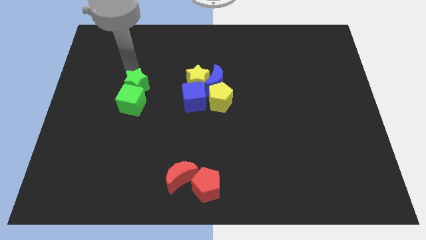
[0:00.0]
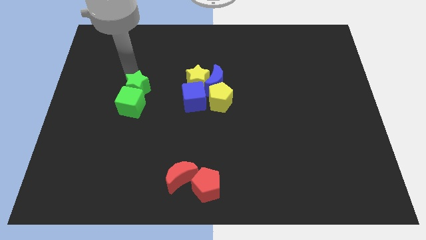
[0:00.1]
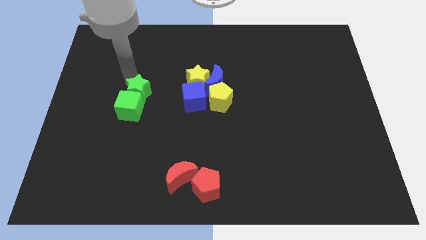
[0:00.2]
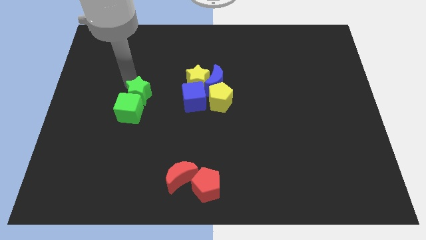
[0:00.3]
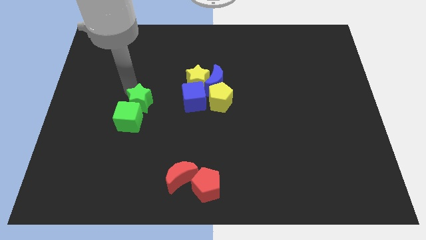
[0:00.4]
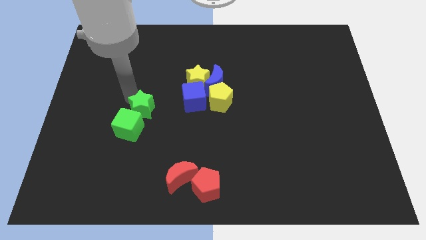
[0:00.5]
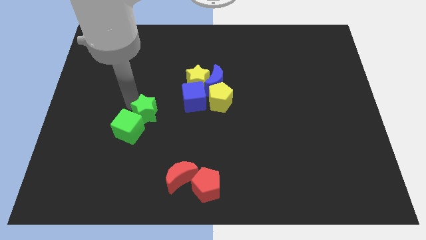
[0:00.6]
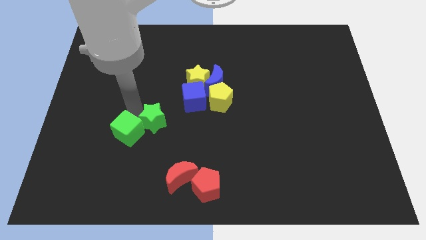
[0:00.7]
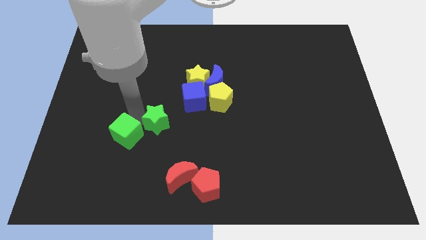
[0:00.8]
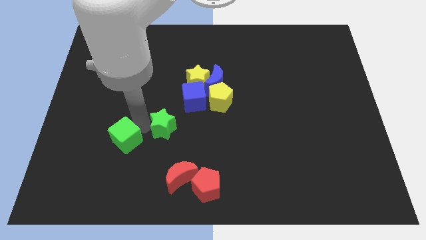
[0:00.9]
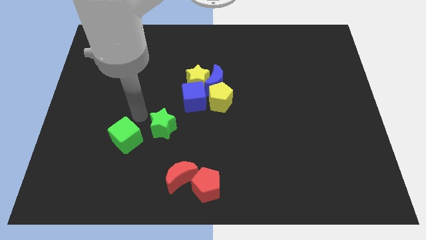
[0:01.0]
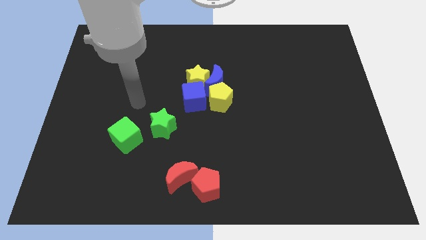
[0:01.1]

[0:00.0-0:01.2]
separate the green star and green cube

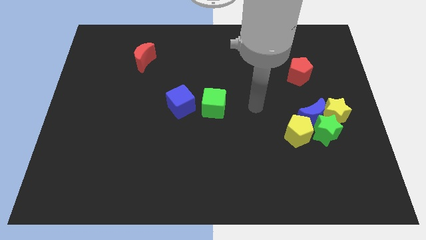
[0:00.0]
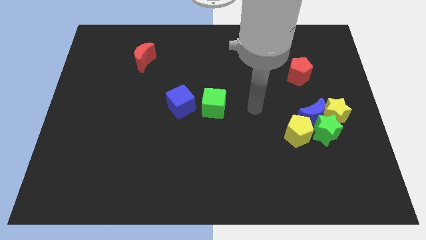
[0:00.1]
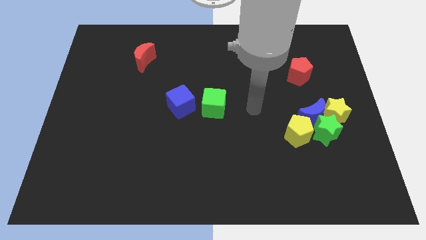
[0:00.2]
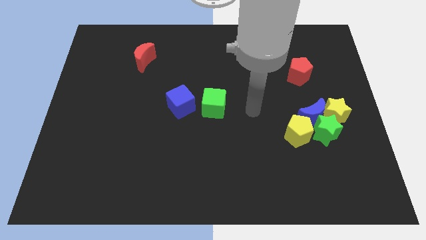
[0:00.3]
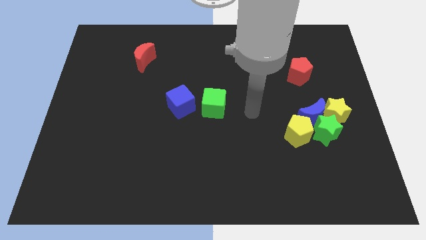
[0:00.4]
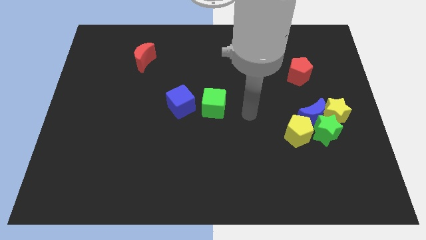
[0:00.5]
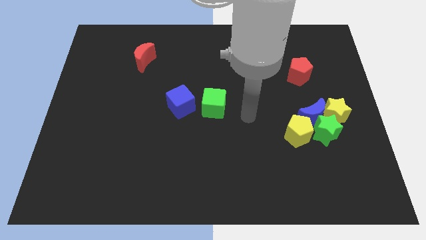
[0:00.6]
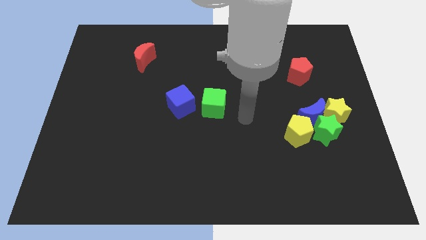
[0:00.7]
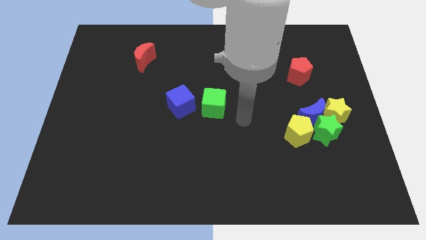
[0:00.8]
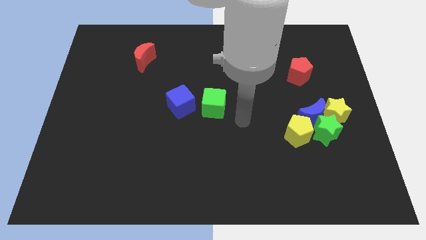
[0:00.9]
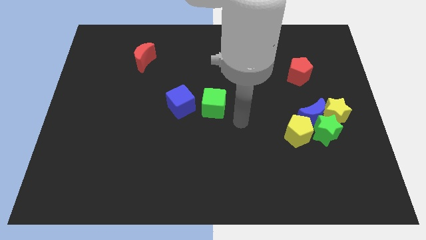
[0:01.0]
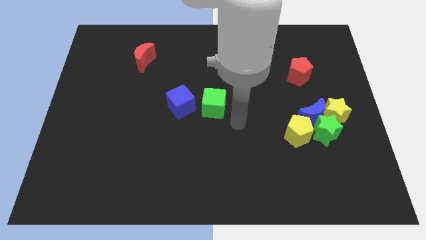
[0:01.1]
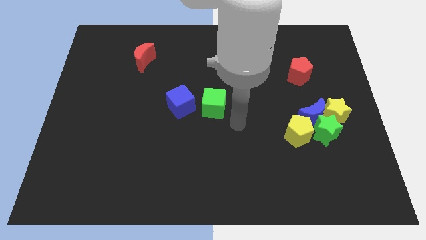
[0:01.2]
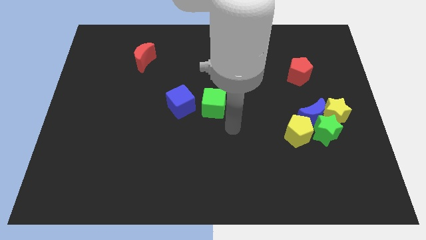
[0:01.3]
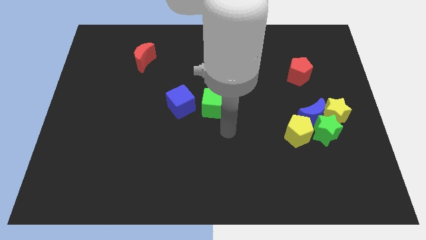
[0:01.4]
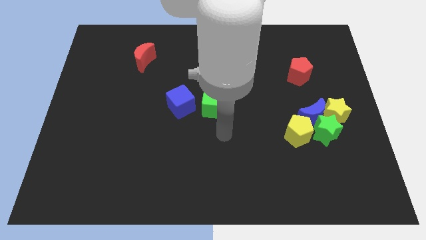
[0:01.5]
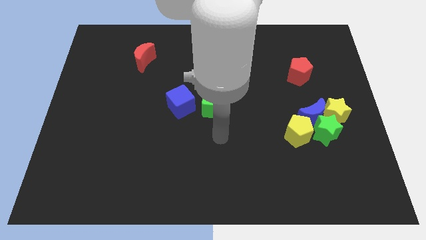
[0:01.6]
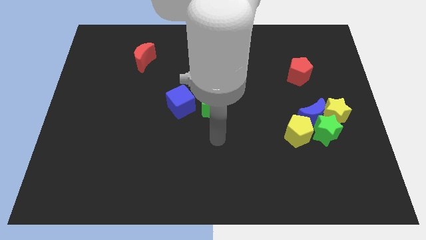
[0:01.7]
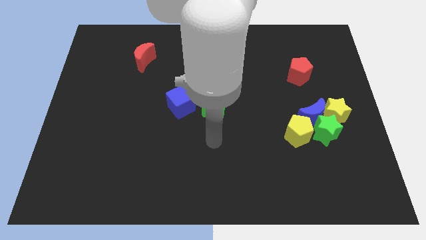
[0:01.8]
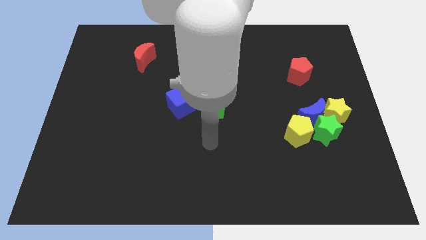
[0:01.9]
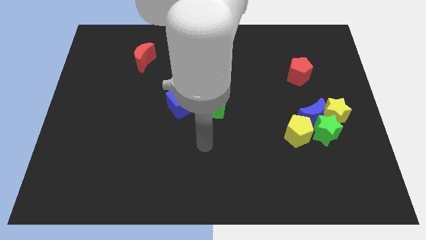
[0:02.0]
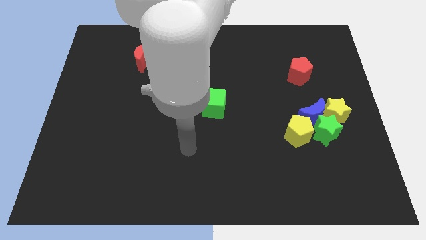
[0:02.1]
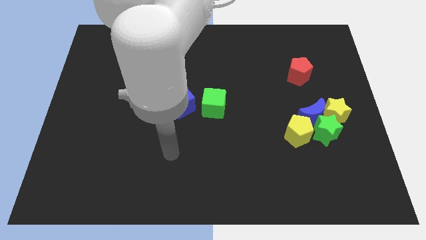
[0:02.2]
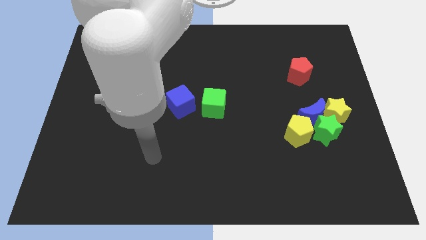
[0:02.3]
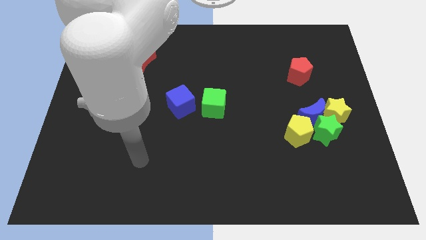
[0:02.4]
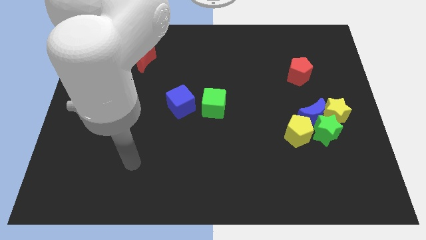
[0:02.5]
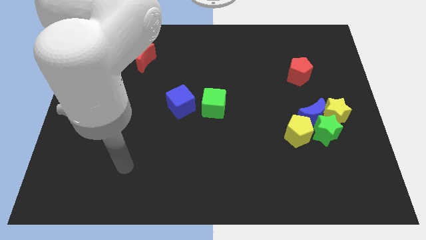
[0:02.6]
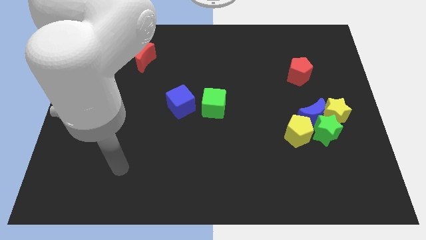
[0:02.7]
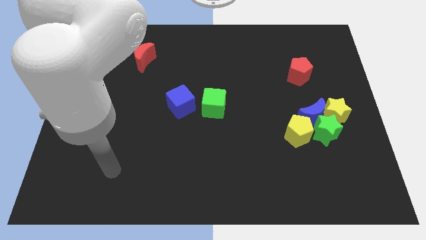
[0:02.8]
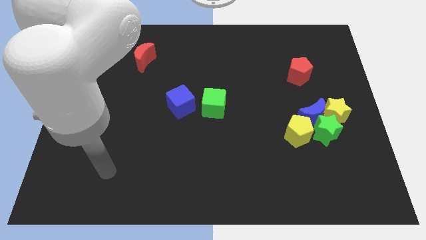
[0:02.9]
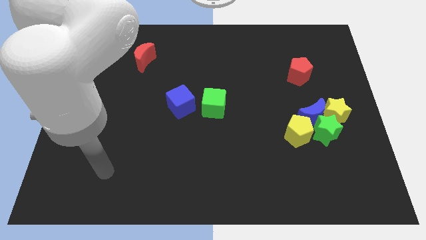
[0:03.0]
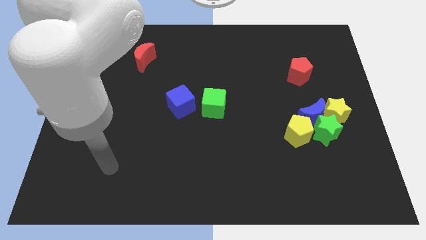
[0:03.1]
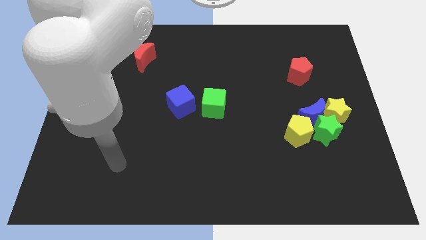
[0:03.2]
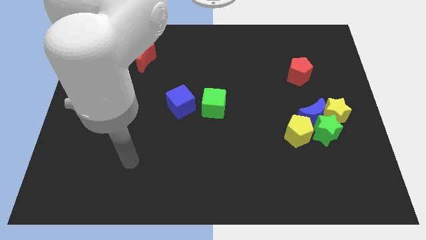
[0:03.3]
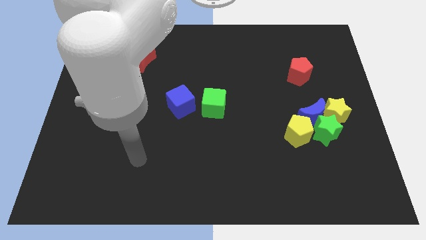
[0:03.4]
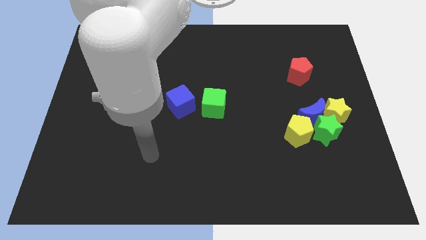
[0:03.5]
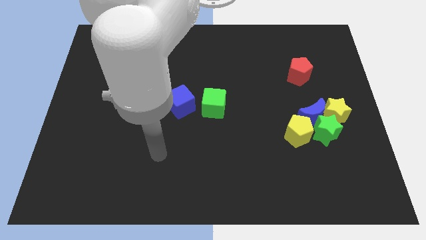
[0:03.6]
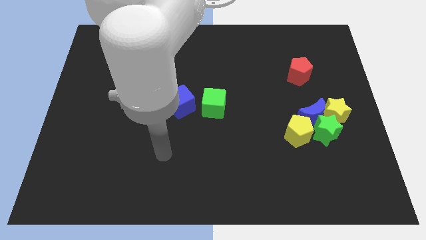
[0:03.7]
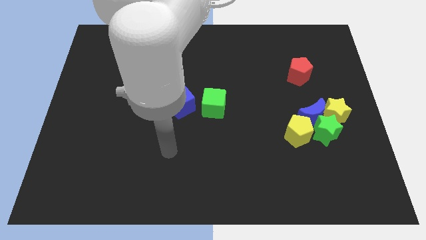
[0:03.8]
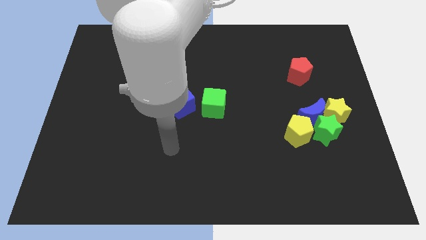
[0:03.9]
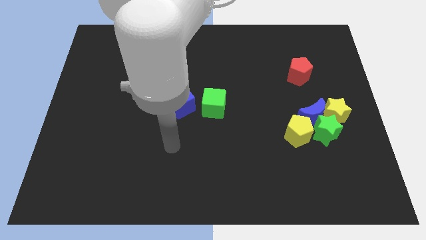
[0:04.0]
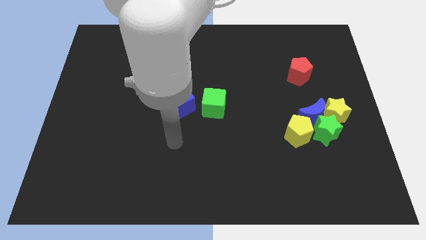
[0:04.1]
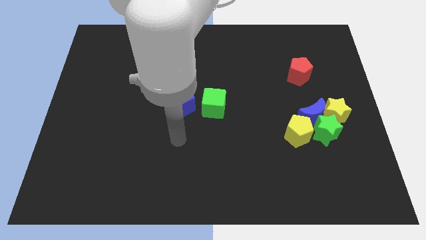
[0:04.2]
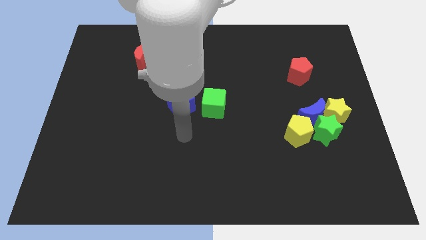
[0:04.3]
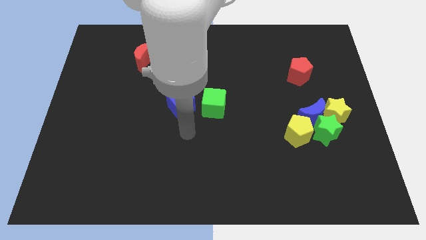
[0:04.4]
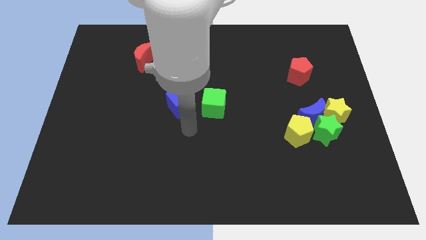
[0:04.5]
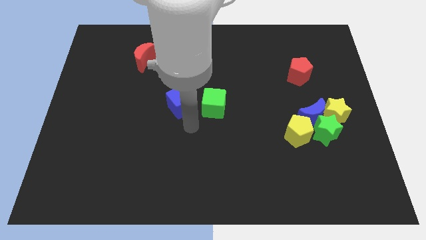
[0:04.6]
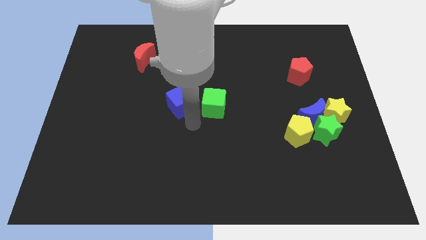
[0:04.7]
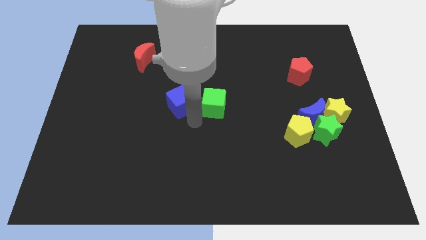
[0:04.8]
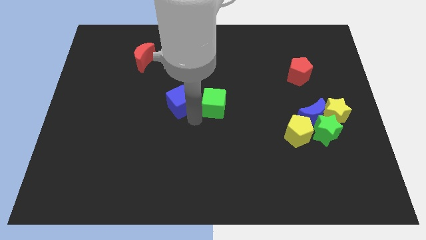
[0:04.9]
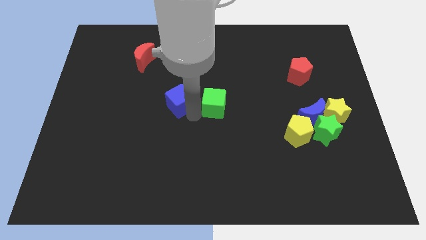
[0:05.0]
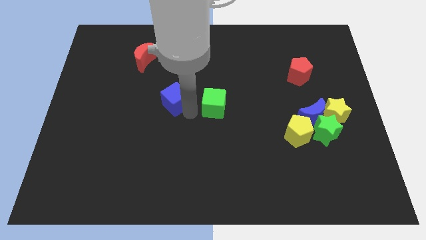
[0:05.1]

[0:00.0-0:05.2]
touch the blue cube

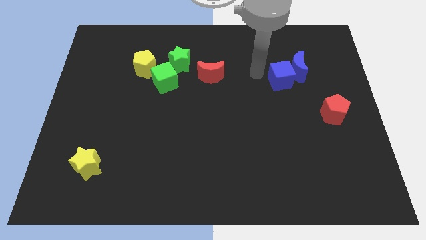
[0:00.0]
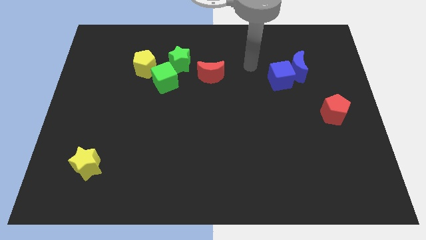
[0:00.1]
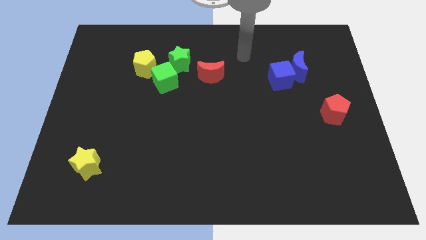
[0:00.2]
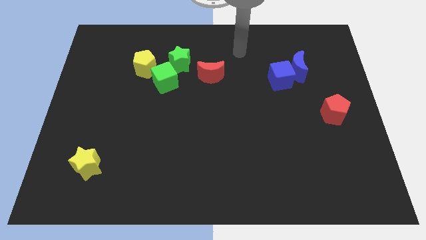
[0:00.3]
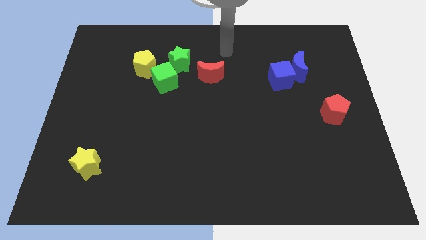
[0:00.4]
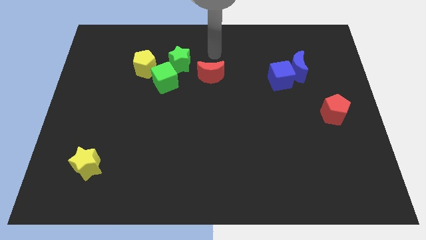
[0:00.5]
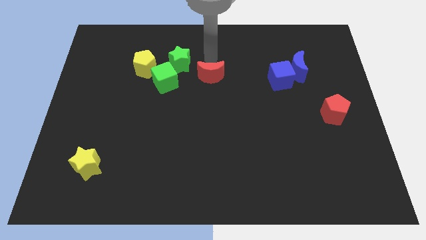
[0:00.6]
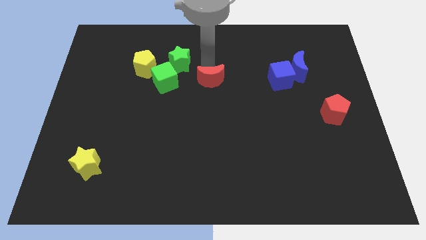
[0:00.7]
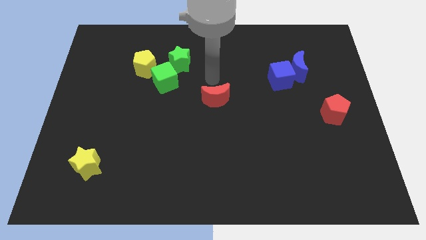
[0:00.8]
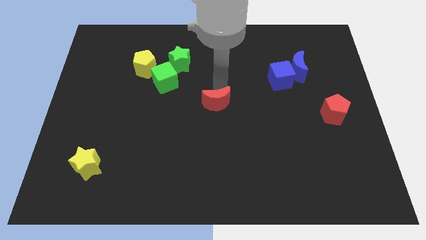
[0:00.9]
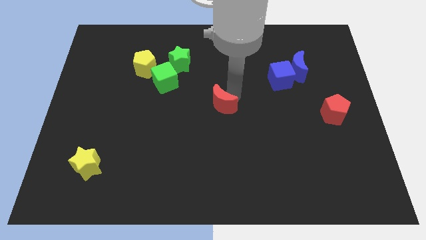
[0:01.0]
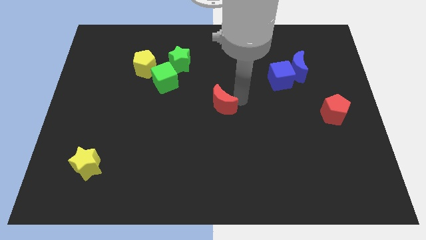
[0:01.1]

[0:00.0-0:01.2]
push the red crescent slightly to the bottom side

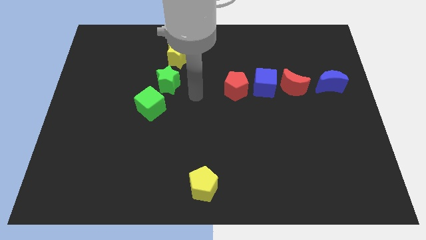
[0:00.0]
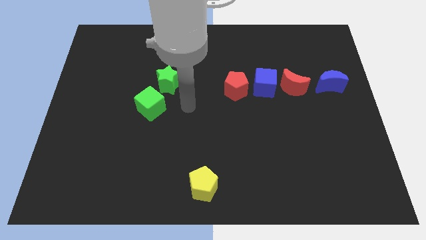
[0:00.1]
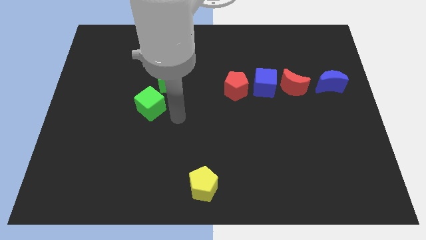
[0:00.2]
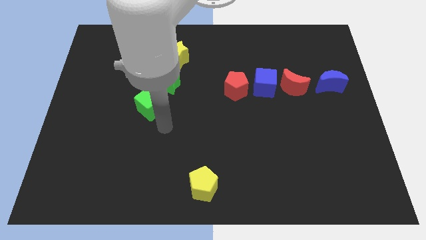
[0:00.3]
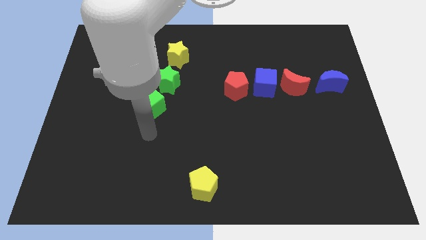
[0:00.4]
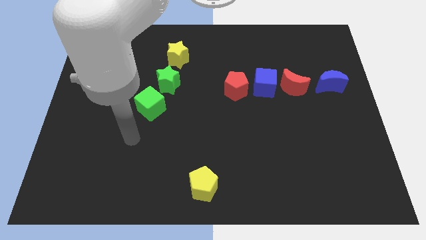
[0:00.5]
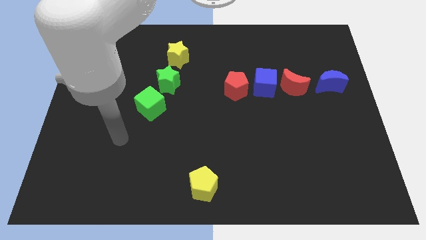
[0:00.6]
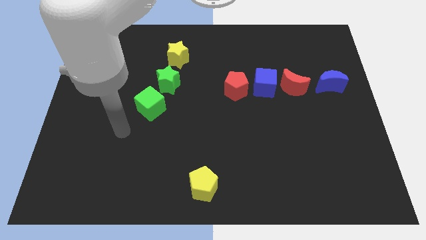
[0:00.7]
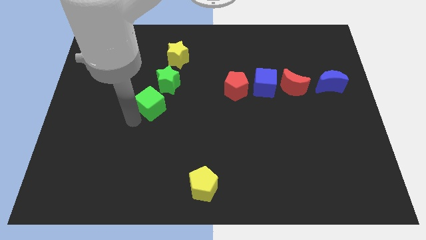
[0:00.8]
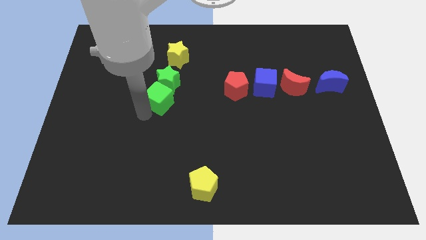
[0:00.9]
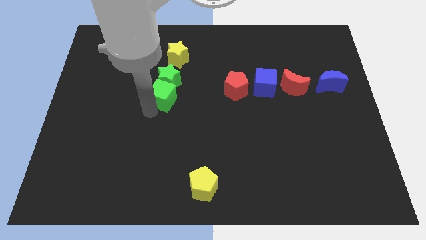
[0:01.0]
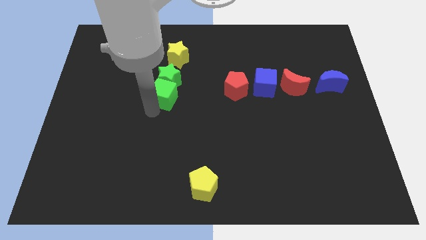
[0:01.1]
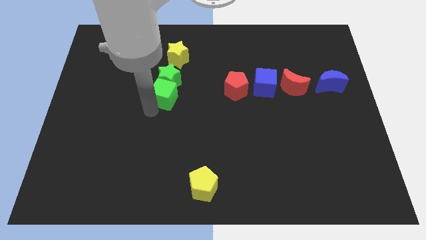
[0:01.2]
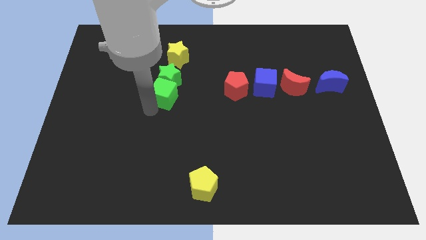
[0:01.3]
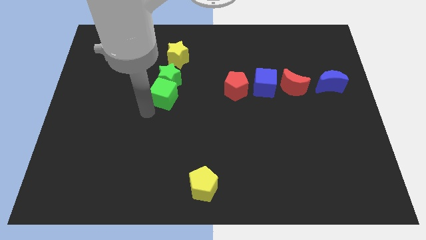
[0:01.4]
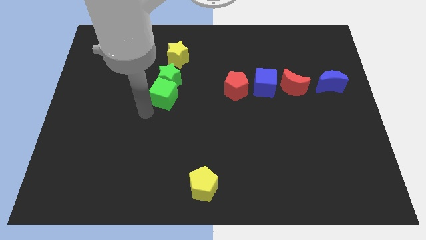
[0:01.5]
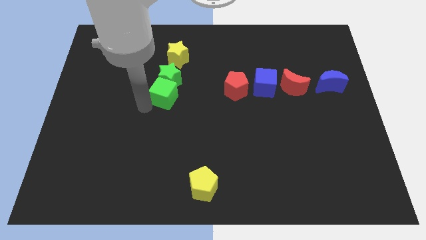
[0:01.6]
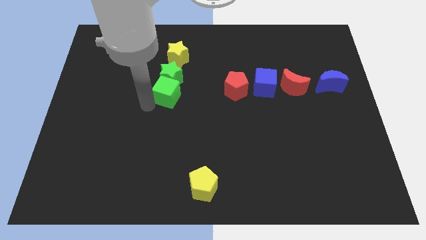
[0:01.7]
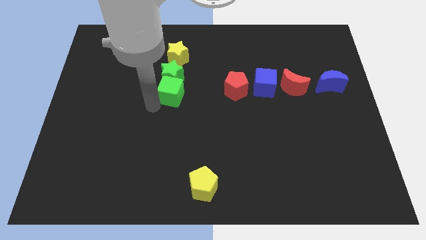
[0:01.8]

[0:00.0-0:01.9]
push the green cube into green star
